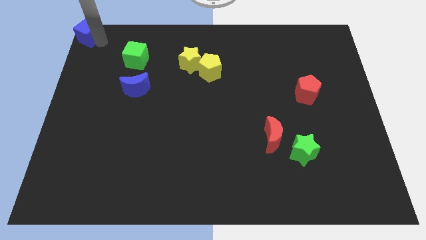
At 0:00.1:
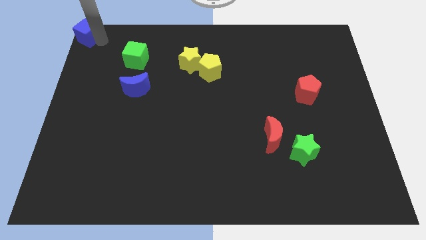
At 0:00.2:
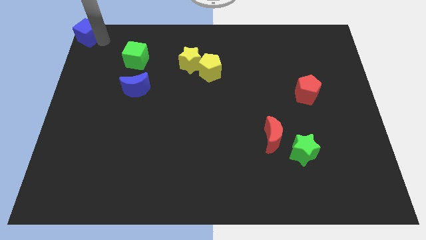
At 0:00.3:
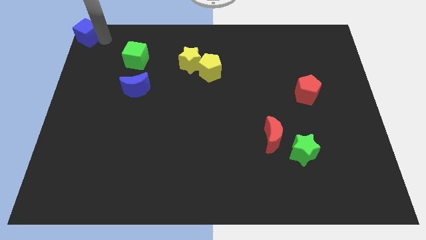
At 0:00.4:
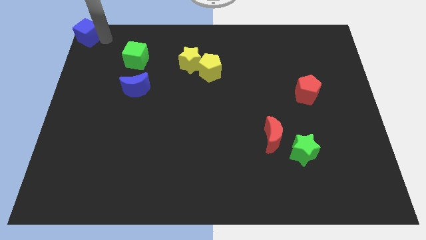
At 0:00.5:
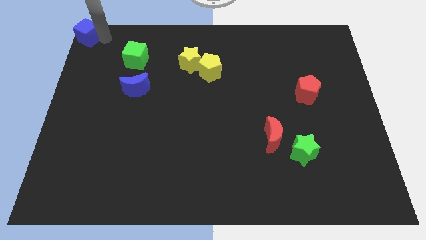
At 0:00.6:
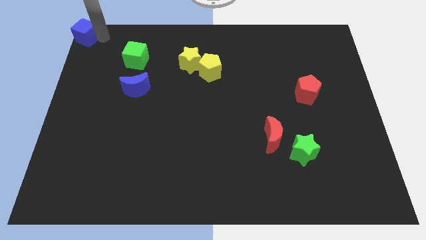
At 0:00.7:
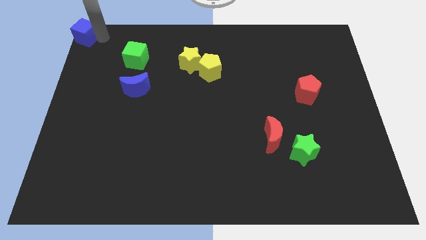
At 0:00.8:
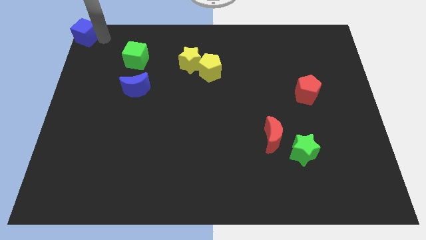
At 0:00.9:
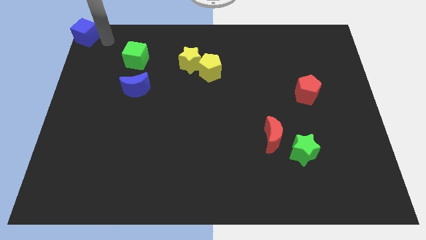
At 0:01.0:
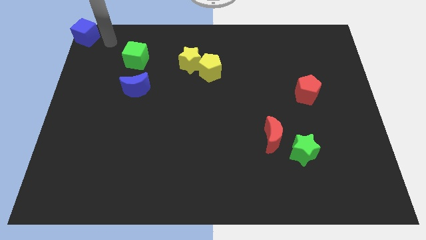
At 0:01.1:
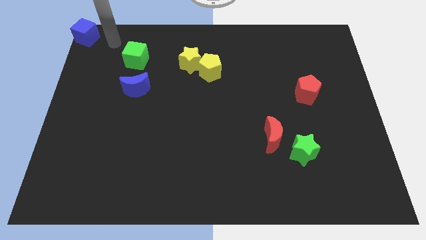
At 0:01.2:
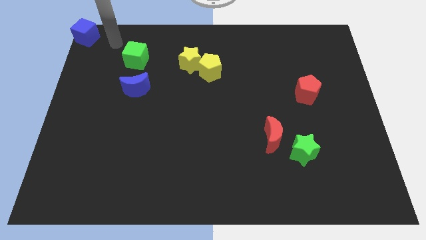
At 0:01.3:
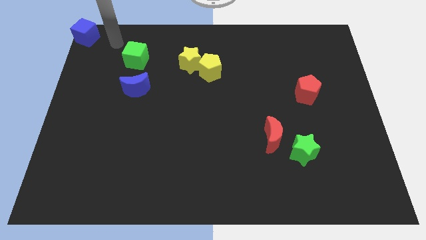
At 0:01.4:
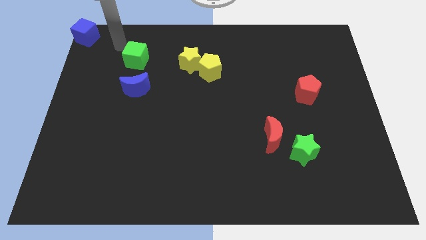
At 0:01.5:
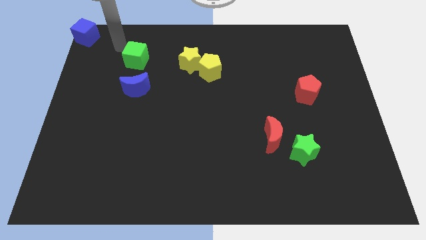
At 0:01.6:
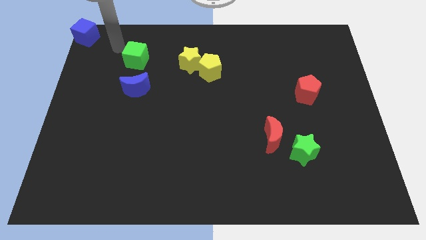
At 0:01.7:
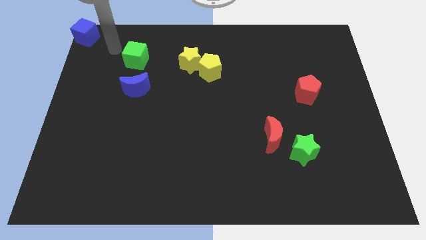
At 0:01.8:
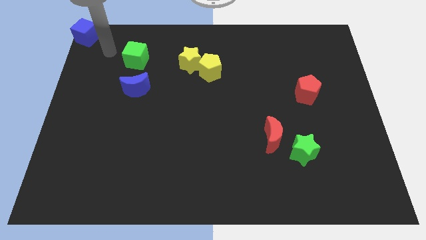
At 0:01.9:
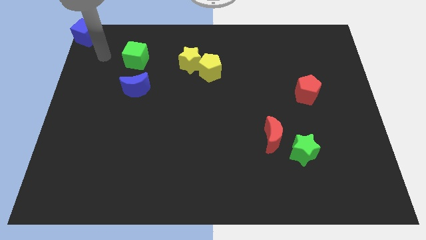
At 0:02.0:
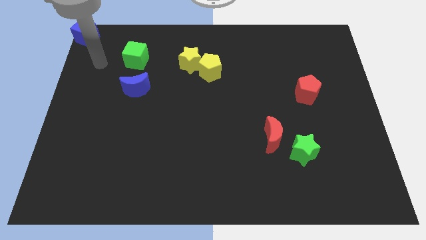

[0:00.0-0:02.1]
move your arm away from blue cube

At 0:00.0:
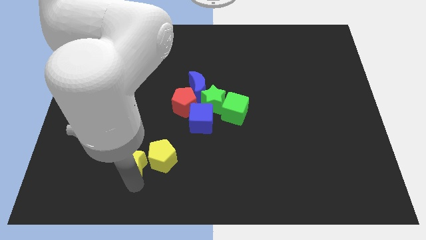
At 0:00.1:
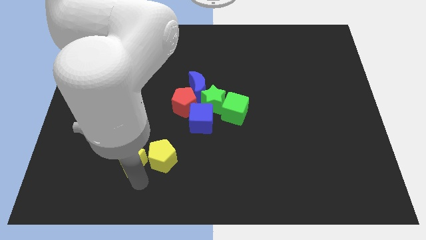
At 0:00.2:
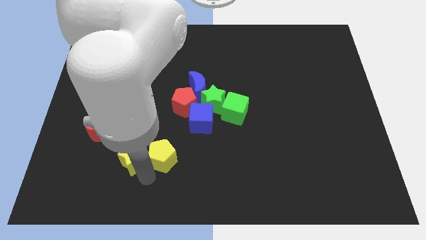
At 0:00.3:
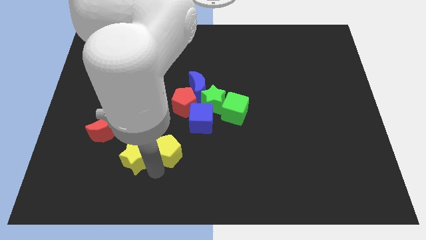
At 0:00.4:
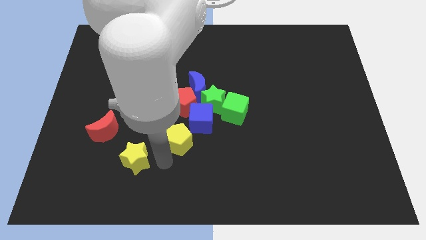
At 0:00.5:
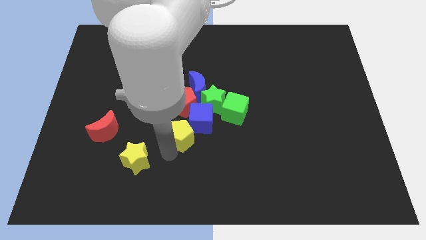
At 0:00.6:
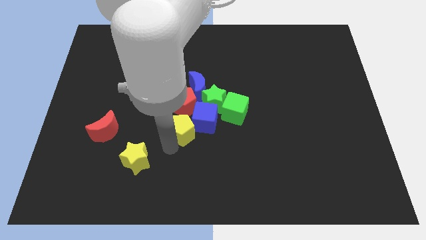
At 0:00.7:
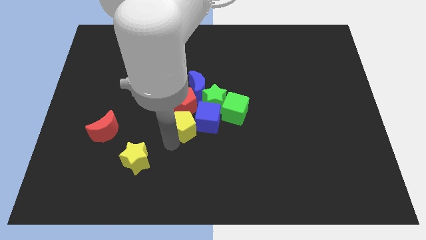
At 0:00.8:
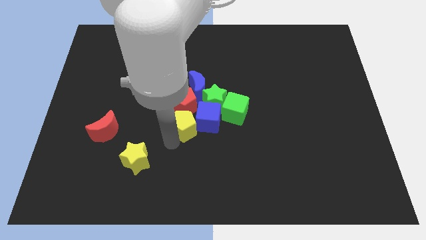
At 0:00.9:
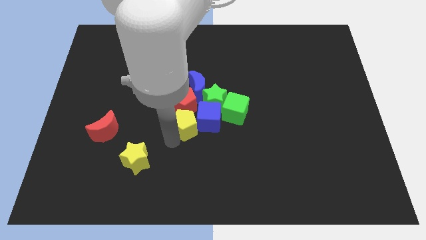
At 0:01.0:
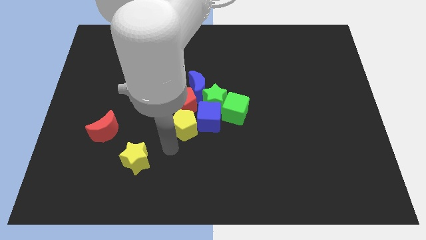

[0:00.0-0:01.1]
push the yellow pentagon to the bottom of the red pentagon

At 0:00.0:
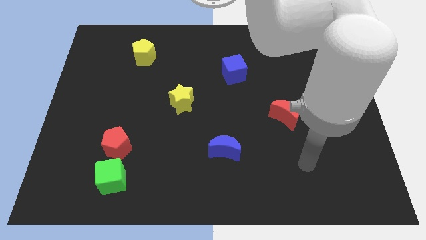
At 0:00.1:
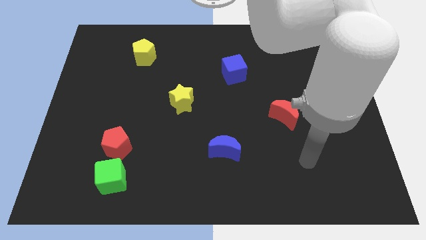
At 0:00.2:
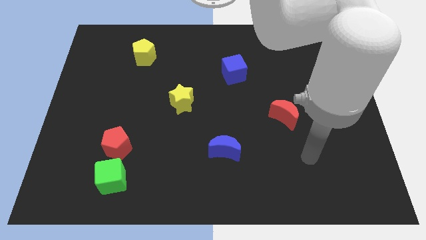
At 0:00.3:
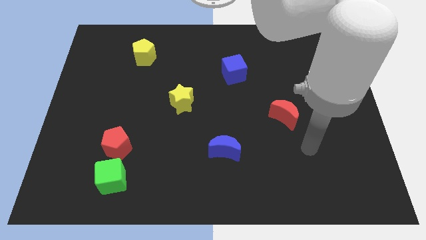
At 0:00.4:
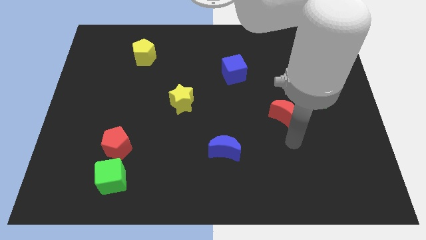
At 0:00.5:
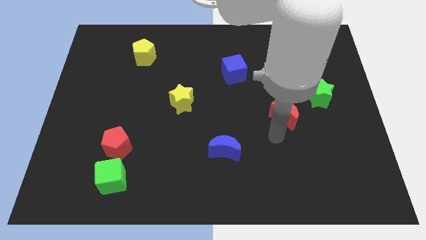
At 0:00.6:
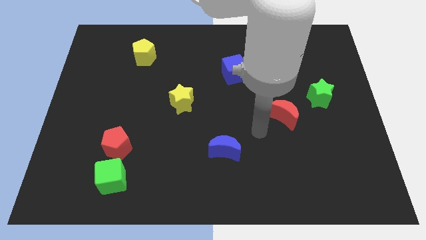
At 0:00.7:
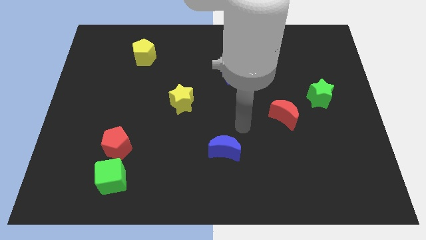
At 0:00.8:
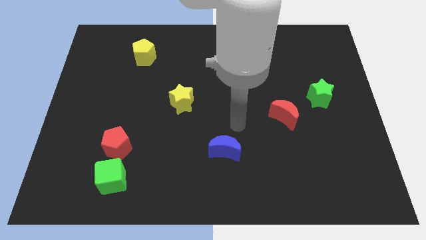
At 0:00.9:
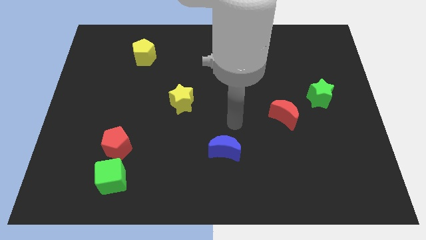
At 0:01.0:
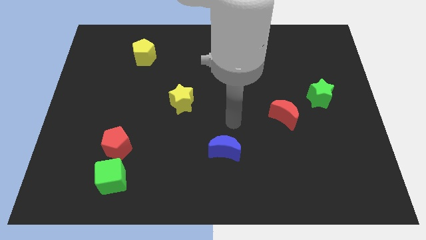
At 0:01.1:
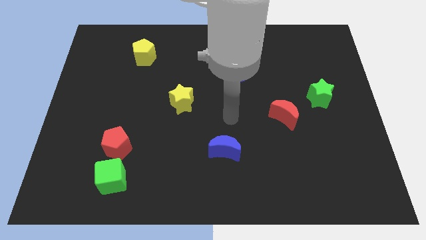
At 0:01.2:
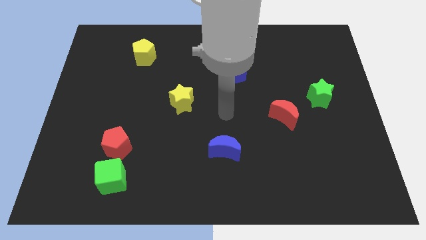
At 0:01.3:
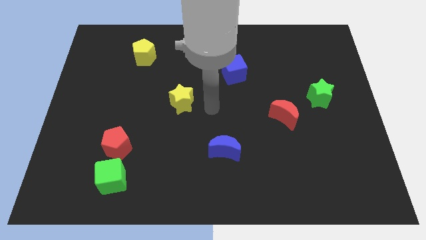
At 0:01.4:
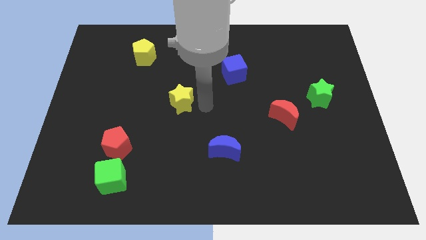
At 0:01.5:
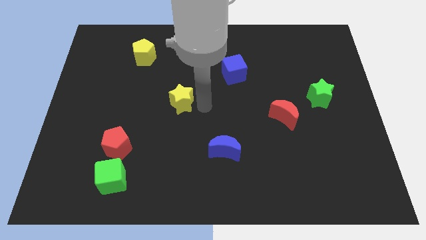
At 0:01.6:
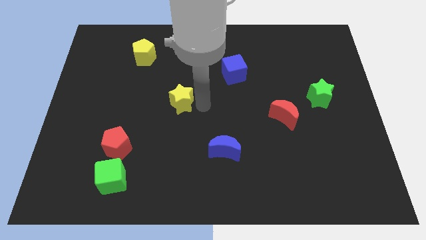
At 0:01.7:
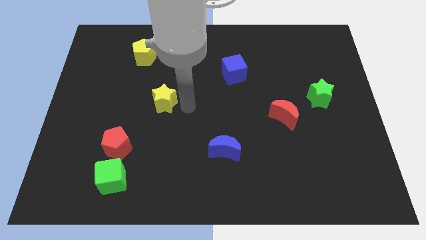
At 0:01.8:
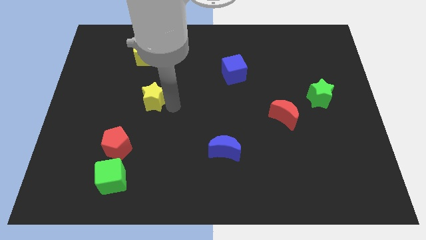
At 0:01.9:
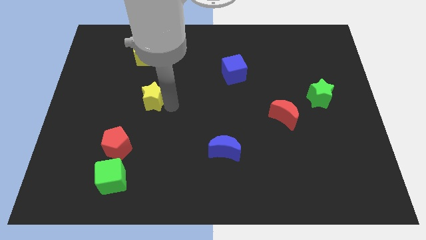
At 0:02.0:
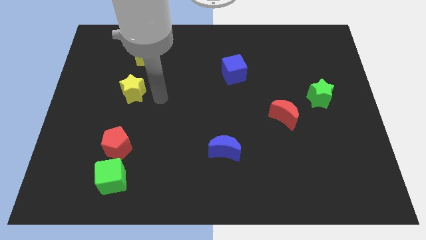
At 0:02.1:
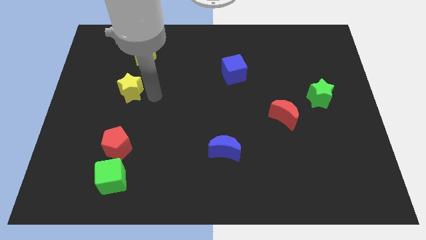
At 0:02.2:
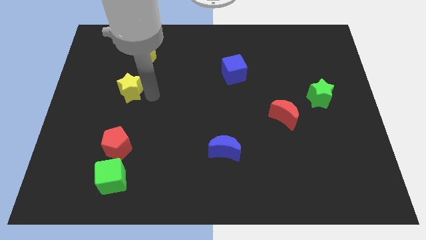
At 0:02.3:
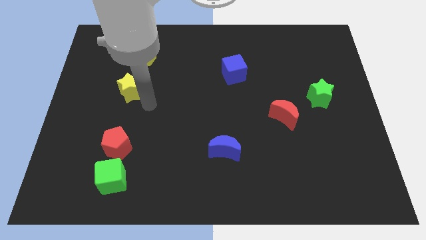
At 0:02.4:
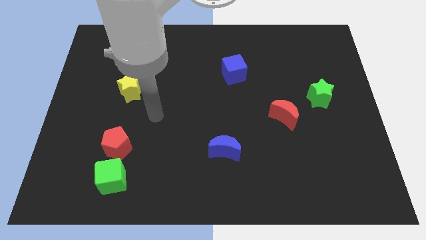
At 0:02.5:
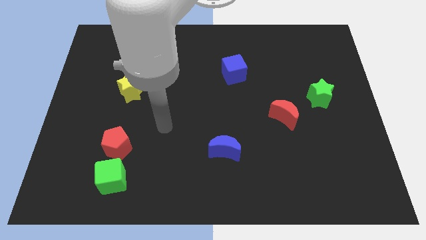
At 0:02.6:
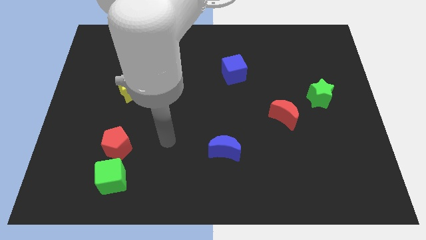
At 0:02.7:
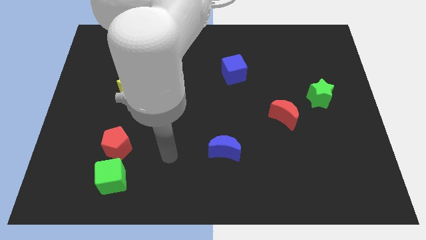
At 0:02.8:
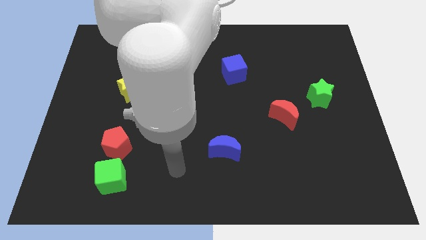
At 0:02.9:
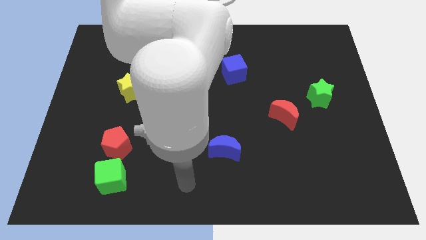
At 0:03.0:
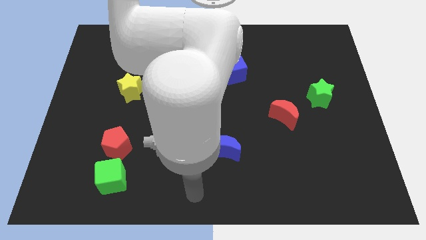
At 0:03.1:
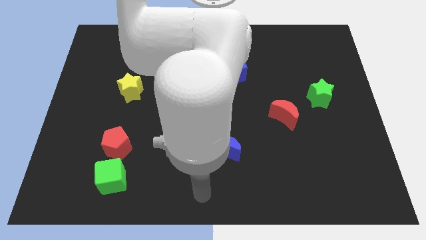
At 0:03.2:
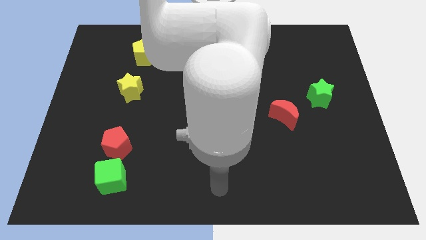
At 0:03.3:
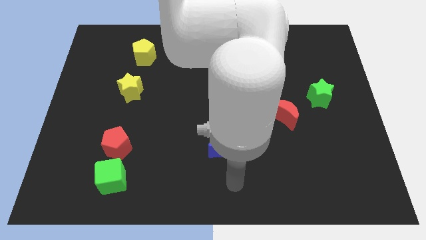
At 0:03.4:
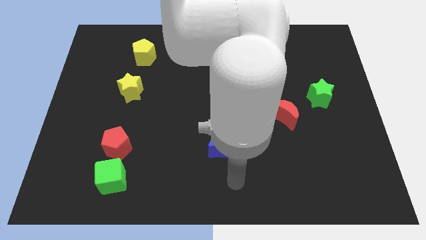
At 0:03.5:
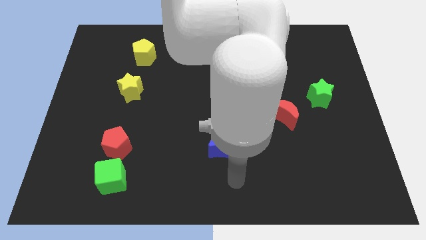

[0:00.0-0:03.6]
move the yellow star to the bottom of the yellow pentagon

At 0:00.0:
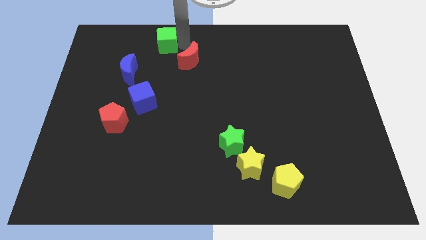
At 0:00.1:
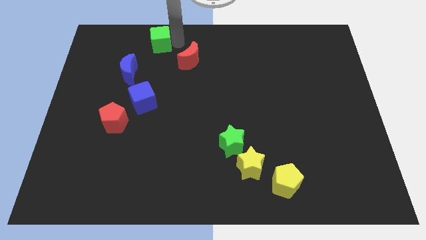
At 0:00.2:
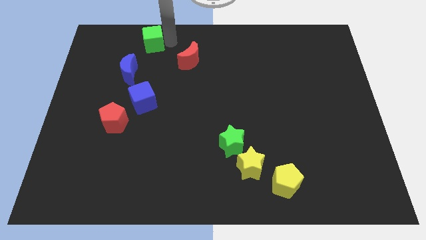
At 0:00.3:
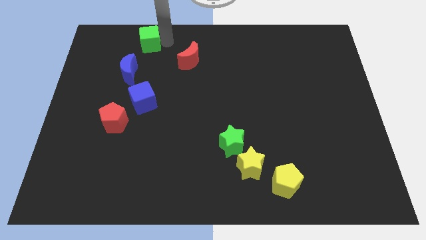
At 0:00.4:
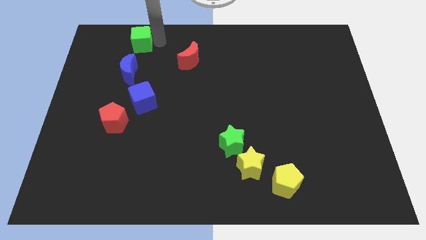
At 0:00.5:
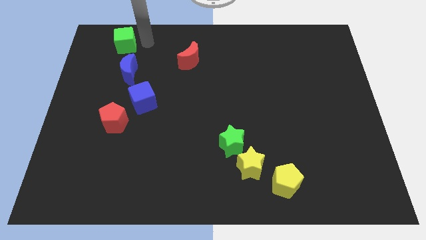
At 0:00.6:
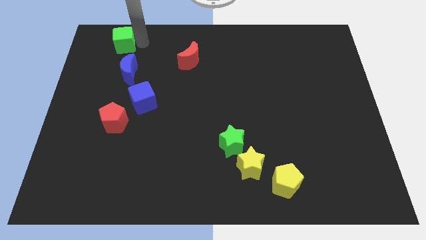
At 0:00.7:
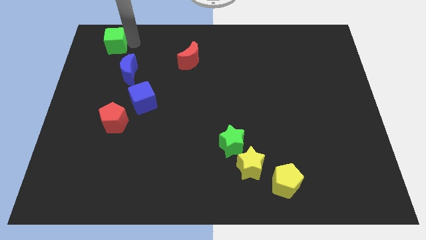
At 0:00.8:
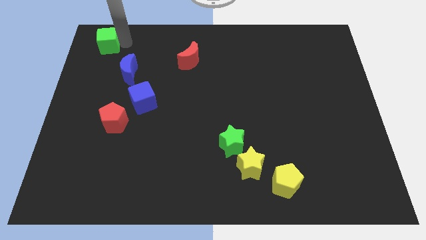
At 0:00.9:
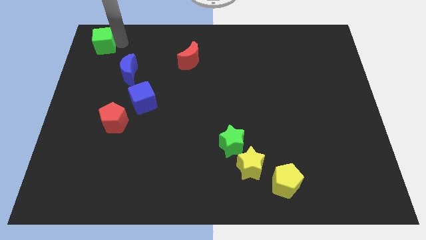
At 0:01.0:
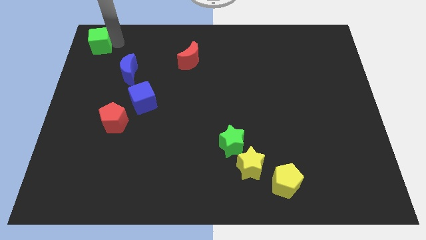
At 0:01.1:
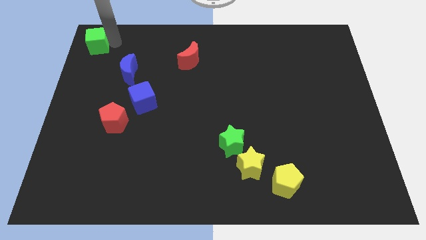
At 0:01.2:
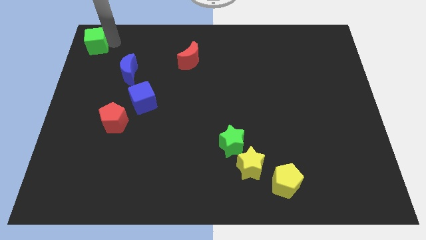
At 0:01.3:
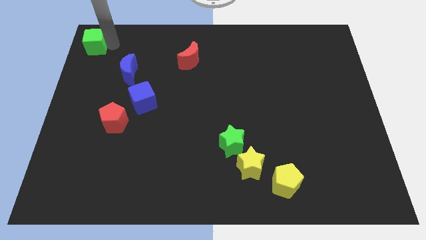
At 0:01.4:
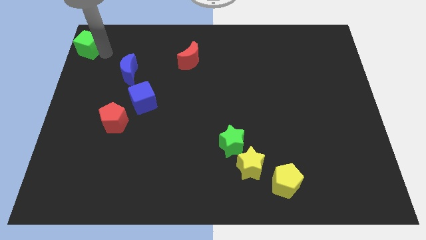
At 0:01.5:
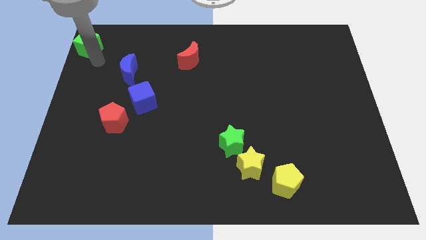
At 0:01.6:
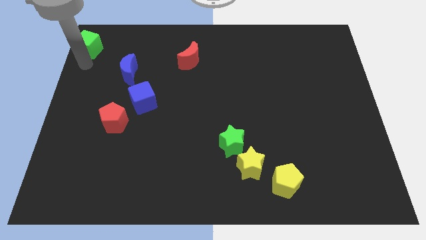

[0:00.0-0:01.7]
slide the green cube slightly to the left

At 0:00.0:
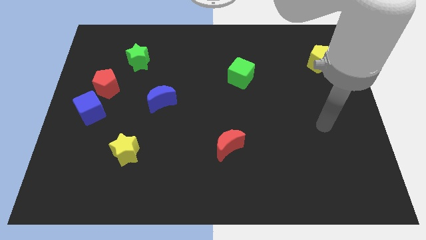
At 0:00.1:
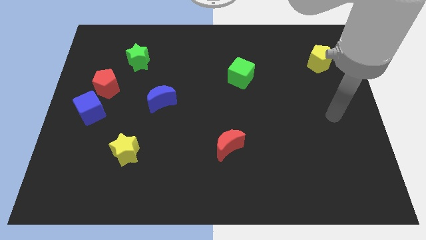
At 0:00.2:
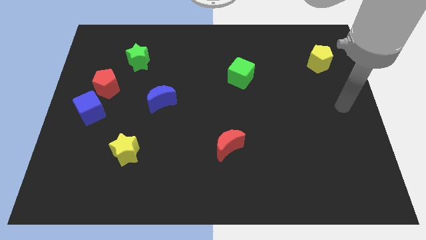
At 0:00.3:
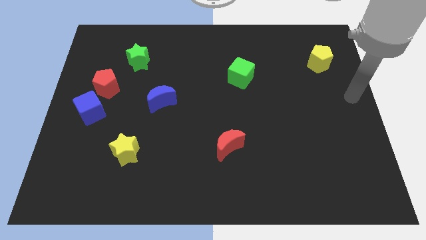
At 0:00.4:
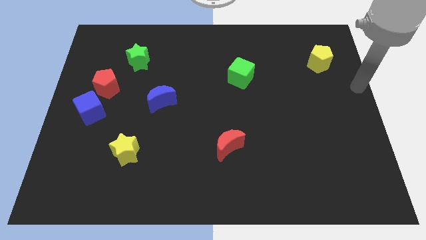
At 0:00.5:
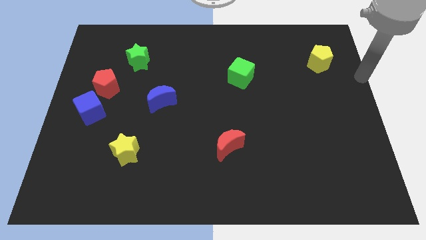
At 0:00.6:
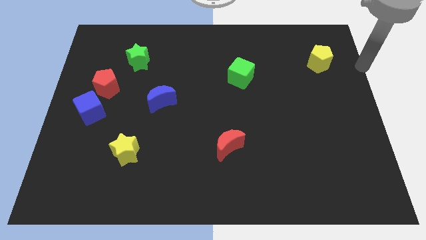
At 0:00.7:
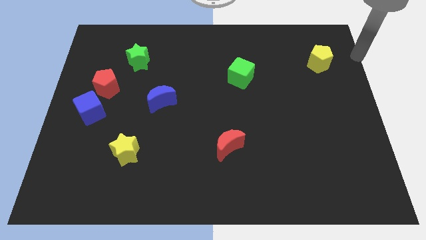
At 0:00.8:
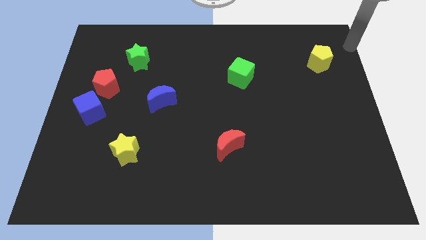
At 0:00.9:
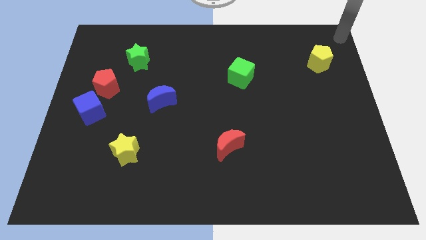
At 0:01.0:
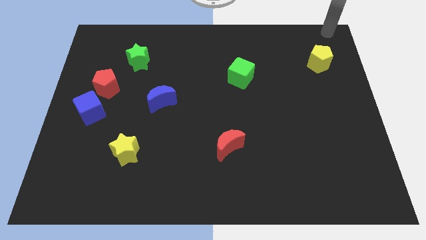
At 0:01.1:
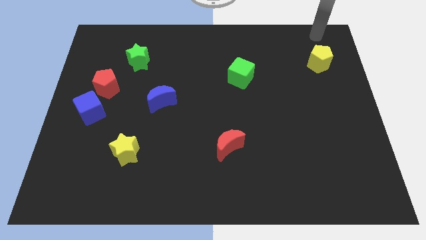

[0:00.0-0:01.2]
push your arm at top right corner
